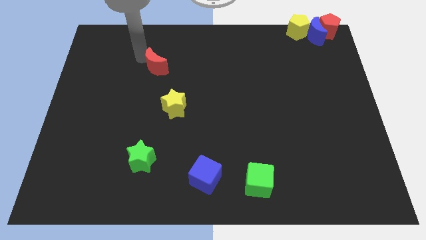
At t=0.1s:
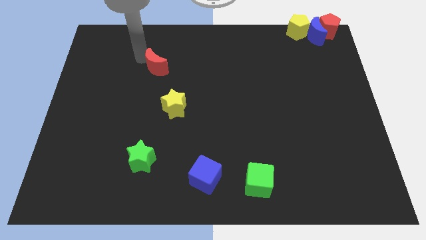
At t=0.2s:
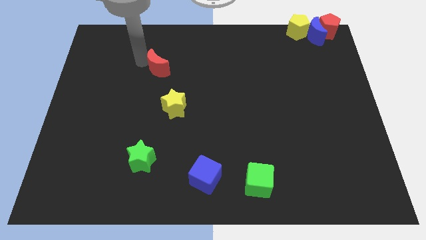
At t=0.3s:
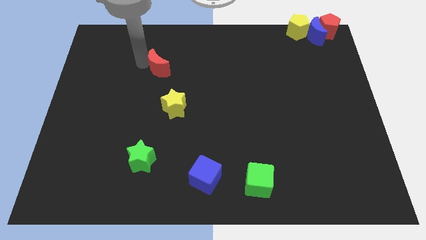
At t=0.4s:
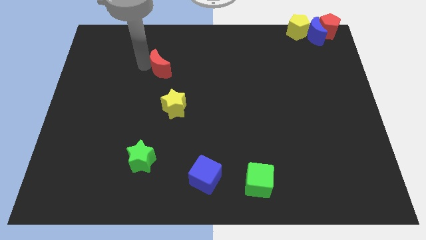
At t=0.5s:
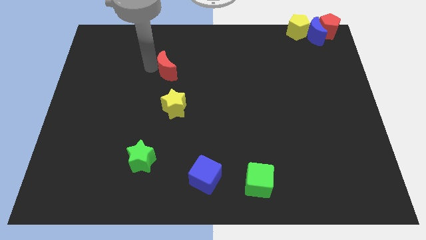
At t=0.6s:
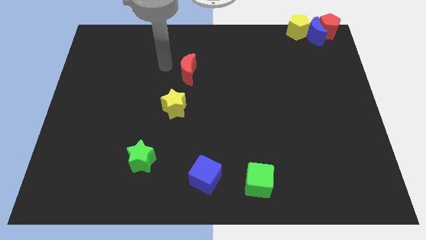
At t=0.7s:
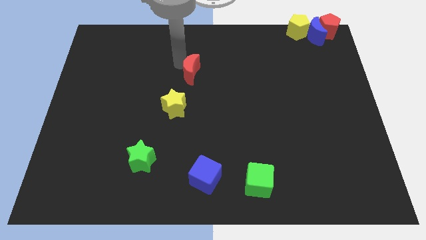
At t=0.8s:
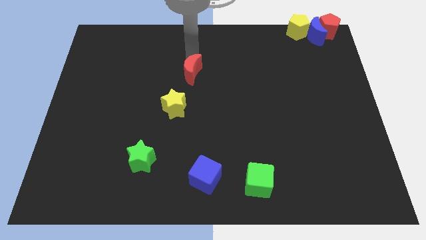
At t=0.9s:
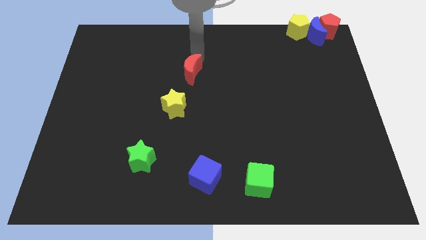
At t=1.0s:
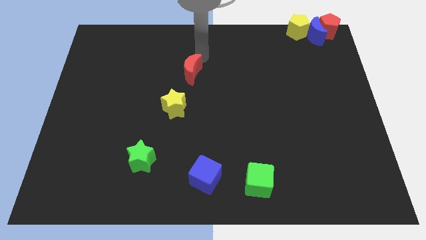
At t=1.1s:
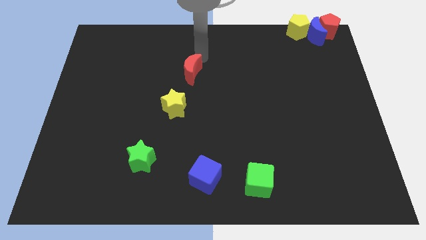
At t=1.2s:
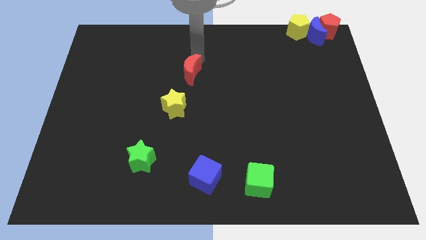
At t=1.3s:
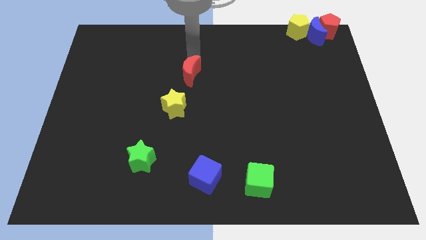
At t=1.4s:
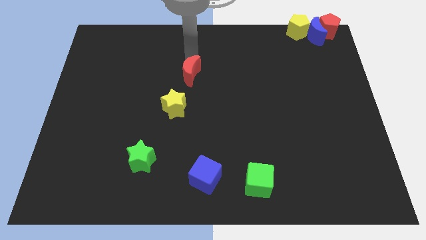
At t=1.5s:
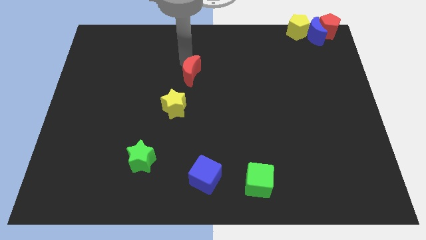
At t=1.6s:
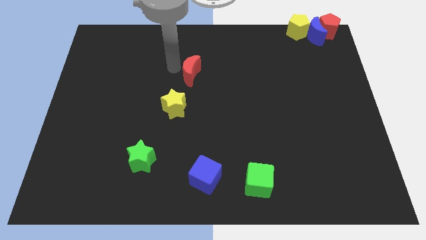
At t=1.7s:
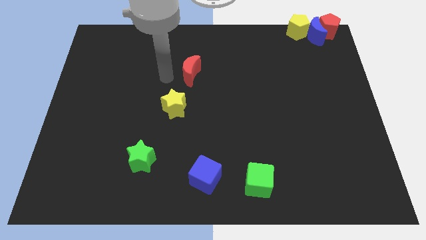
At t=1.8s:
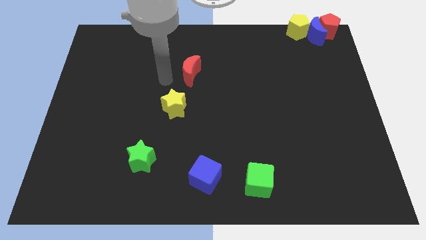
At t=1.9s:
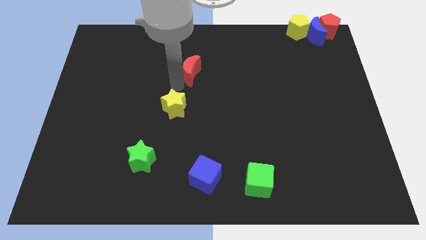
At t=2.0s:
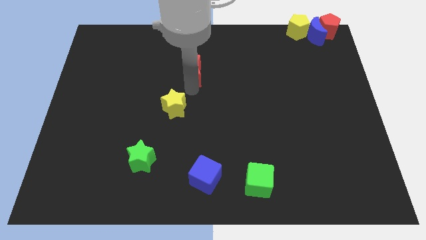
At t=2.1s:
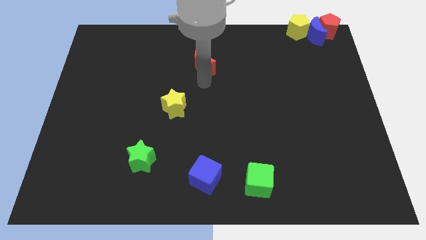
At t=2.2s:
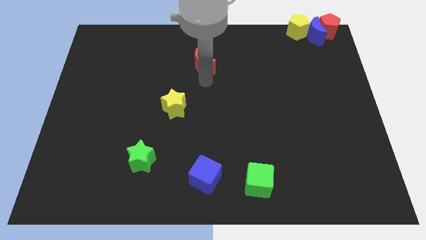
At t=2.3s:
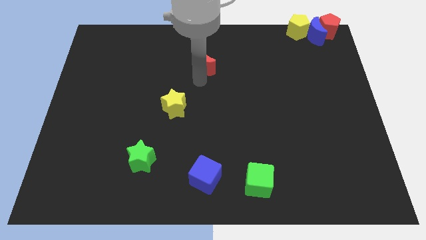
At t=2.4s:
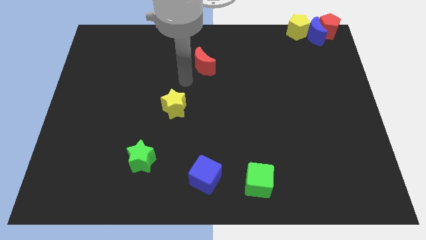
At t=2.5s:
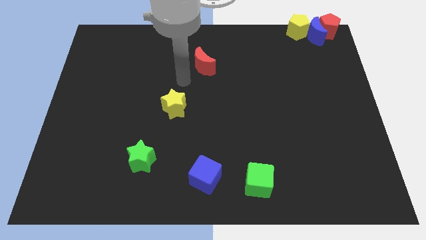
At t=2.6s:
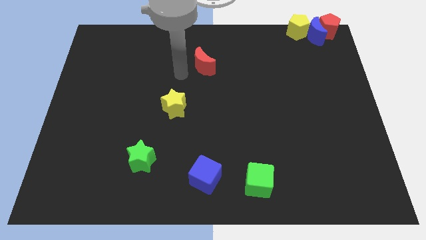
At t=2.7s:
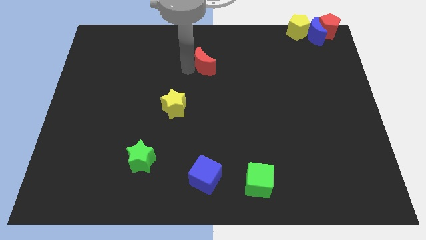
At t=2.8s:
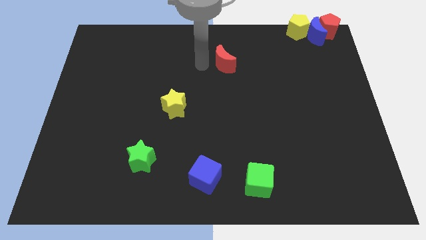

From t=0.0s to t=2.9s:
drag red moon towards right side of the board

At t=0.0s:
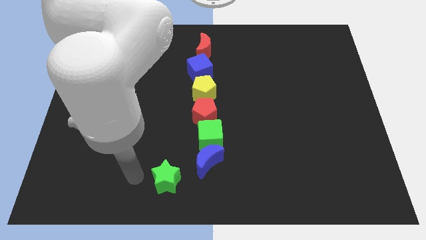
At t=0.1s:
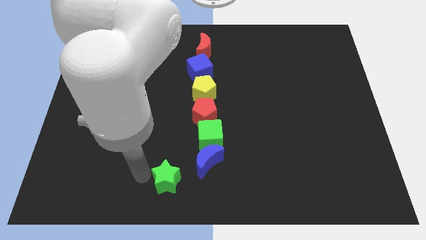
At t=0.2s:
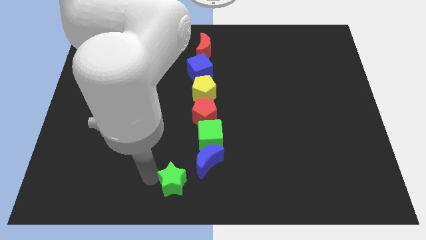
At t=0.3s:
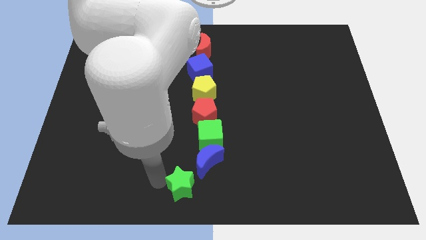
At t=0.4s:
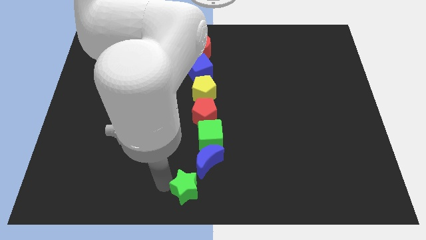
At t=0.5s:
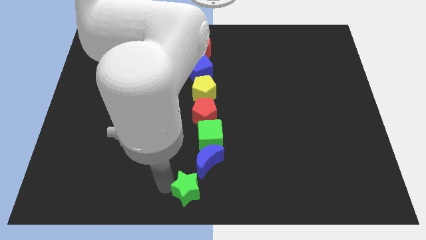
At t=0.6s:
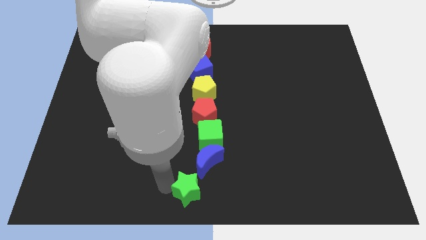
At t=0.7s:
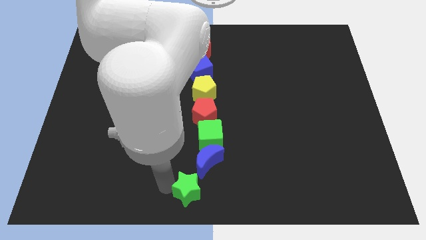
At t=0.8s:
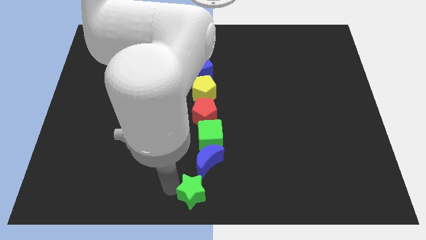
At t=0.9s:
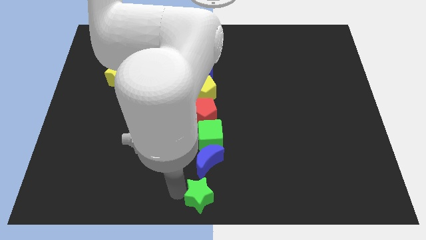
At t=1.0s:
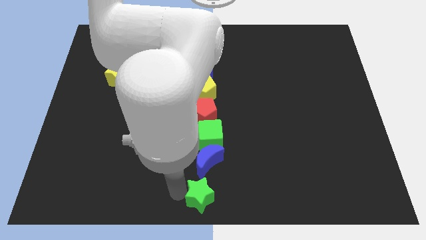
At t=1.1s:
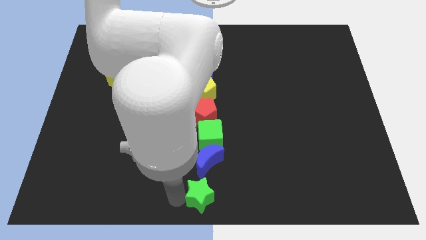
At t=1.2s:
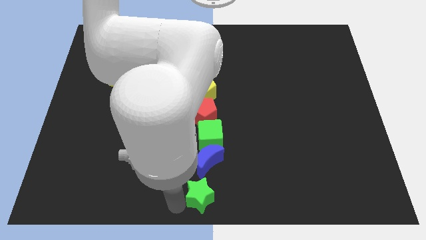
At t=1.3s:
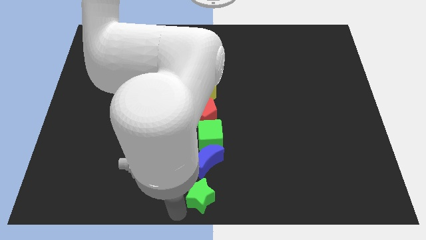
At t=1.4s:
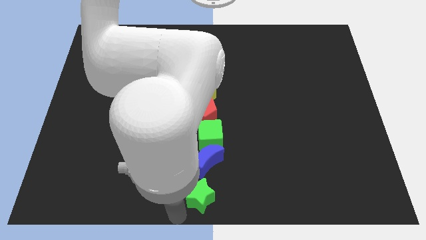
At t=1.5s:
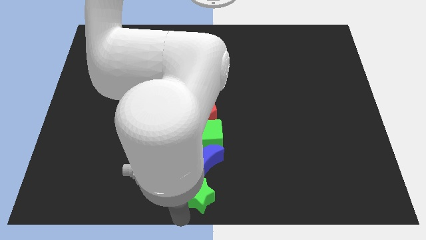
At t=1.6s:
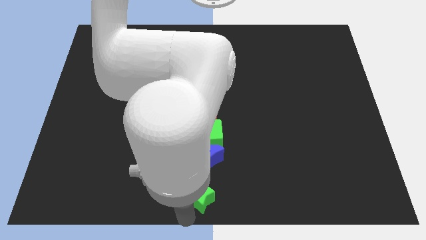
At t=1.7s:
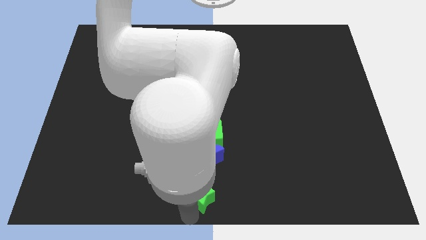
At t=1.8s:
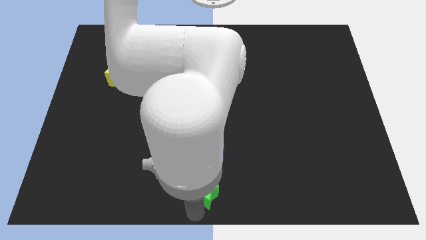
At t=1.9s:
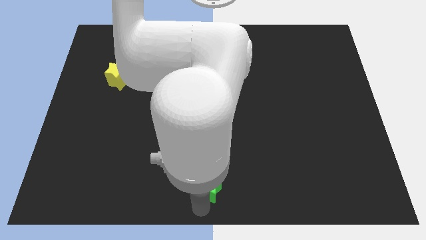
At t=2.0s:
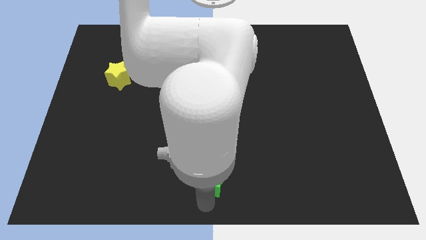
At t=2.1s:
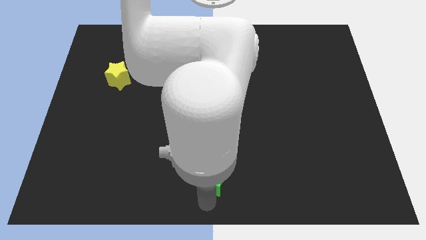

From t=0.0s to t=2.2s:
put the green star at the bottom center of the board

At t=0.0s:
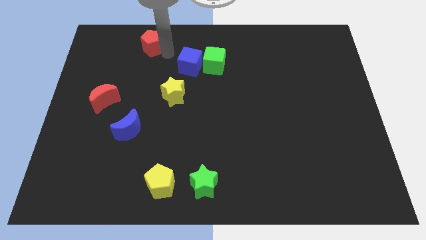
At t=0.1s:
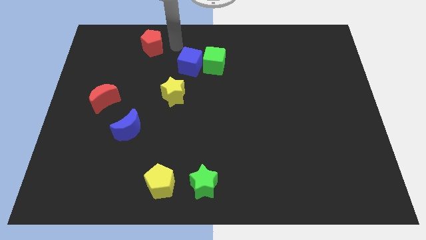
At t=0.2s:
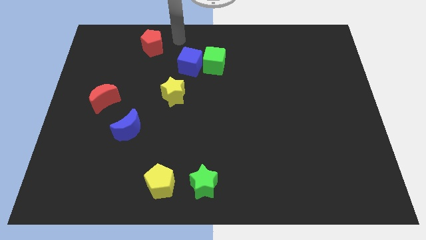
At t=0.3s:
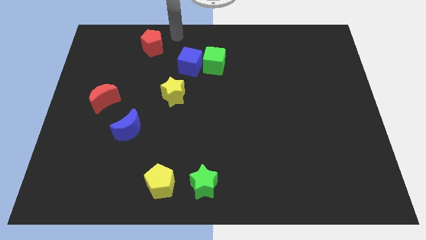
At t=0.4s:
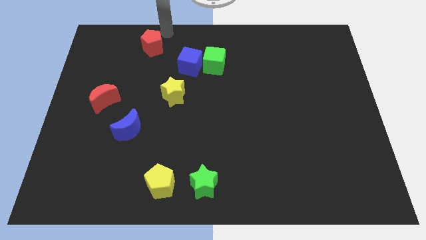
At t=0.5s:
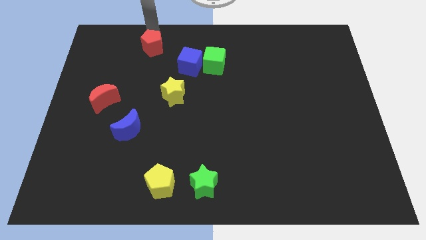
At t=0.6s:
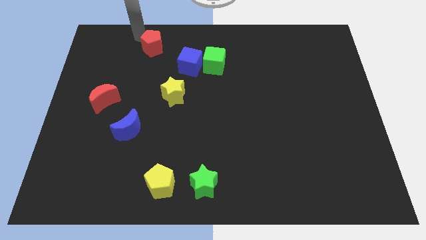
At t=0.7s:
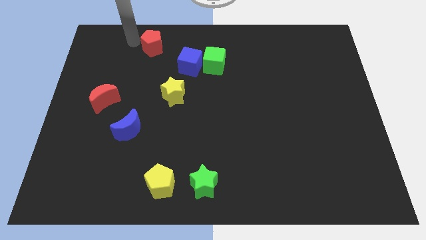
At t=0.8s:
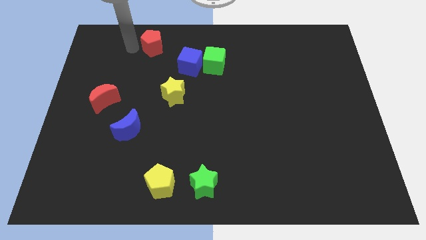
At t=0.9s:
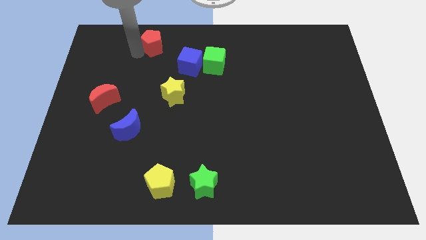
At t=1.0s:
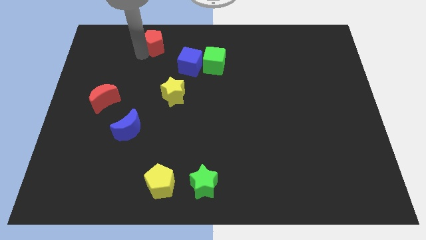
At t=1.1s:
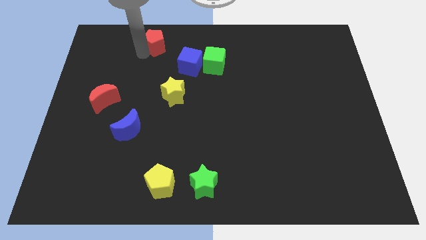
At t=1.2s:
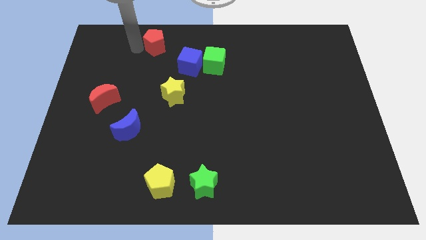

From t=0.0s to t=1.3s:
place your hand to the left of the red pentagon

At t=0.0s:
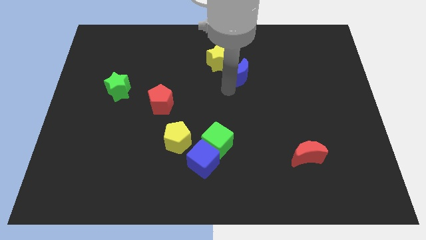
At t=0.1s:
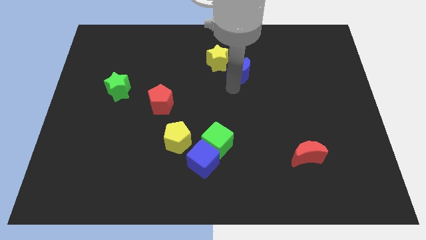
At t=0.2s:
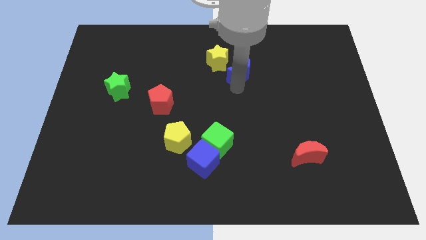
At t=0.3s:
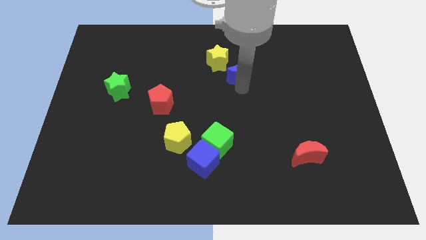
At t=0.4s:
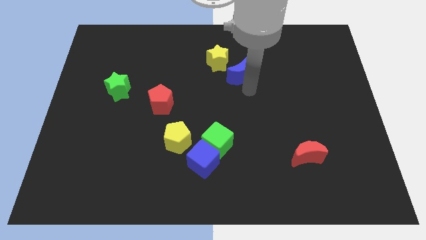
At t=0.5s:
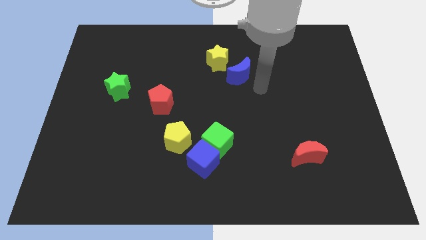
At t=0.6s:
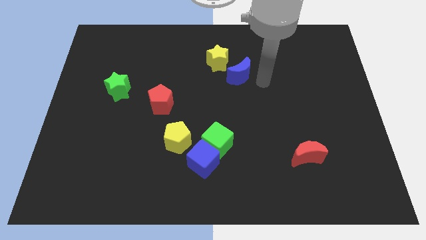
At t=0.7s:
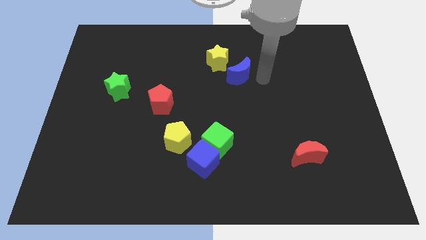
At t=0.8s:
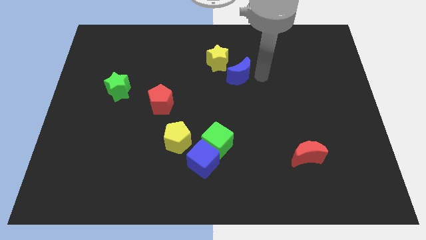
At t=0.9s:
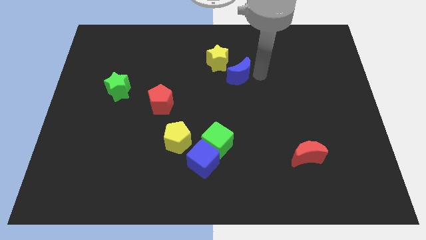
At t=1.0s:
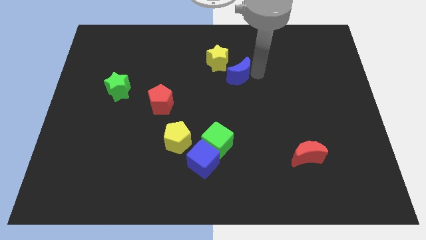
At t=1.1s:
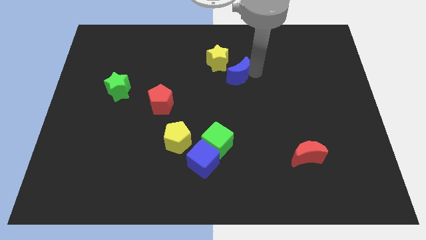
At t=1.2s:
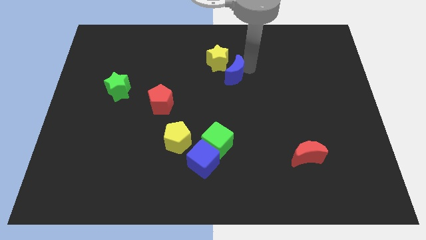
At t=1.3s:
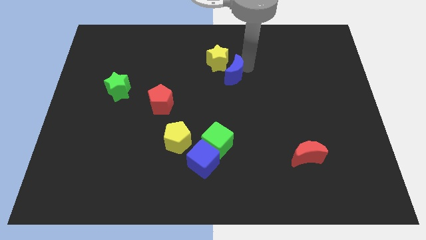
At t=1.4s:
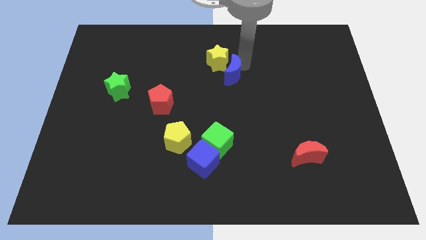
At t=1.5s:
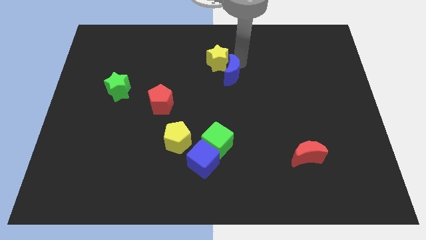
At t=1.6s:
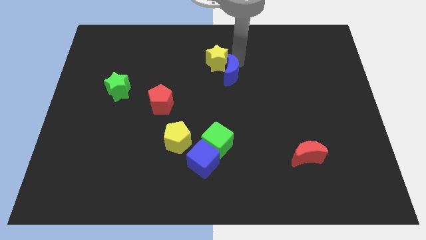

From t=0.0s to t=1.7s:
place your arm at the top of blue moon

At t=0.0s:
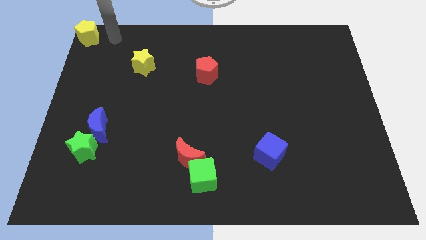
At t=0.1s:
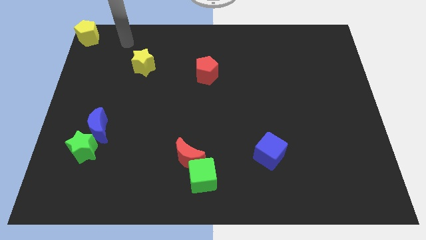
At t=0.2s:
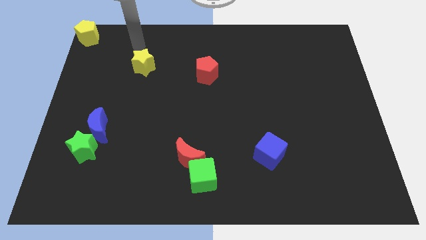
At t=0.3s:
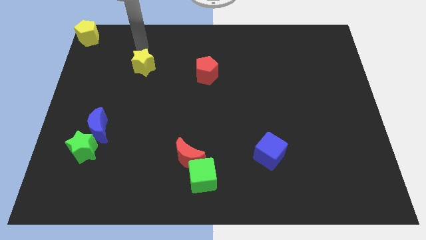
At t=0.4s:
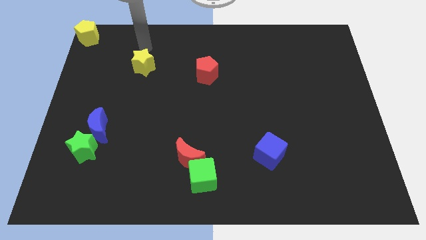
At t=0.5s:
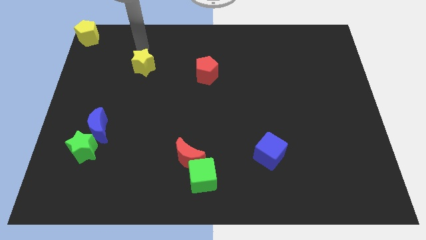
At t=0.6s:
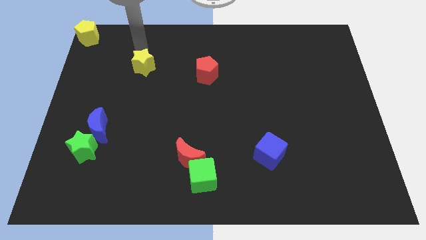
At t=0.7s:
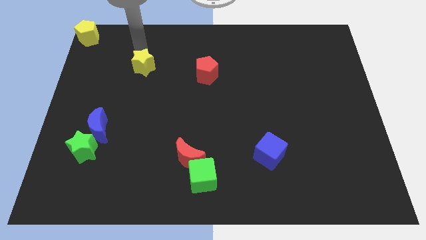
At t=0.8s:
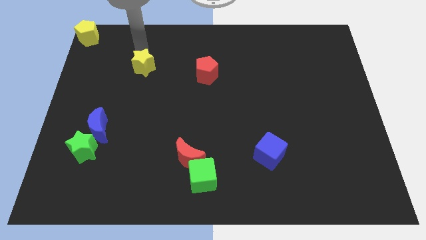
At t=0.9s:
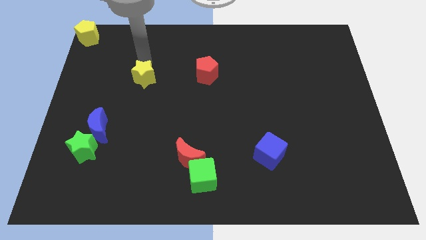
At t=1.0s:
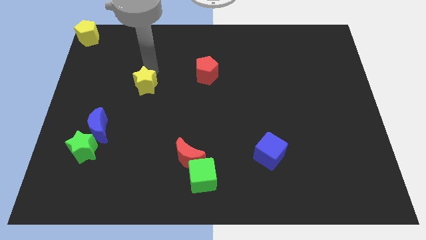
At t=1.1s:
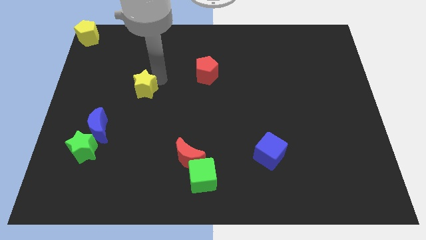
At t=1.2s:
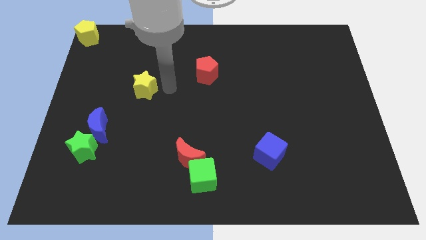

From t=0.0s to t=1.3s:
push the yellow star slightly to the bottom
